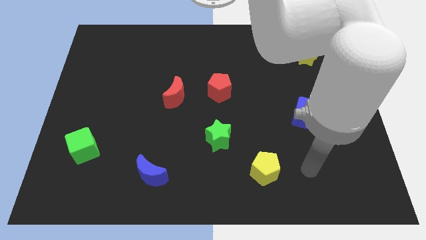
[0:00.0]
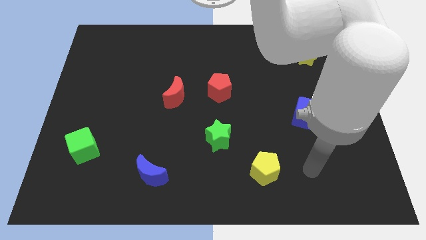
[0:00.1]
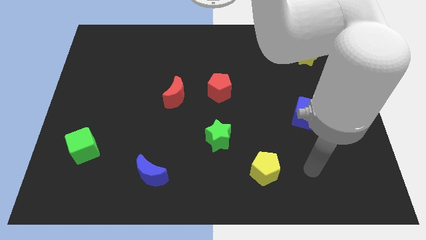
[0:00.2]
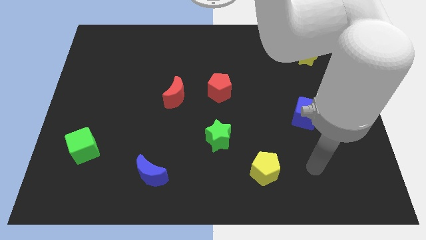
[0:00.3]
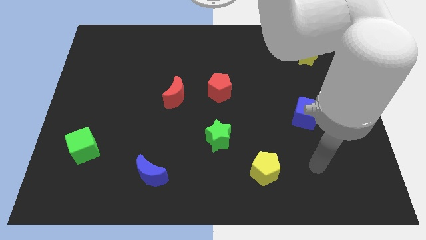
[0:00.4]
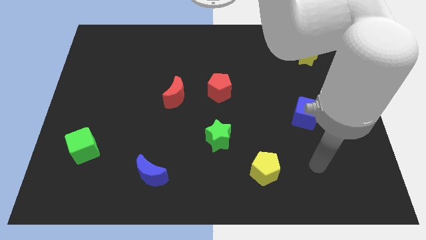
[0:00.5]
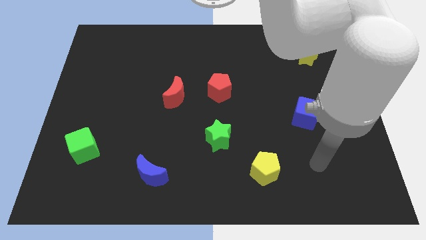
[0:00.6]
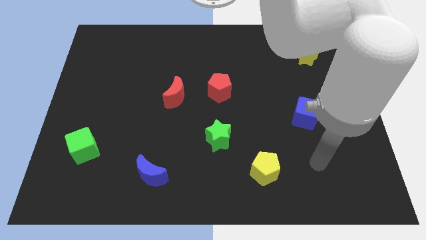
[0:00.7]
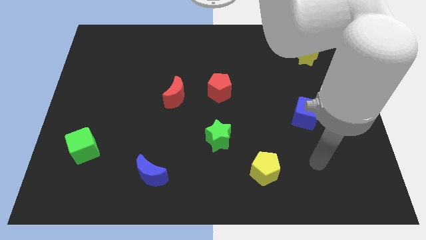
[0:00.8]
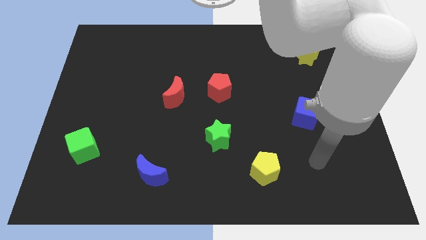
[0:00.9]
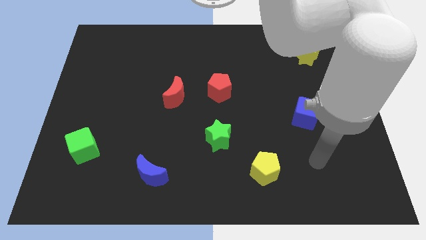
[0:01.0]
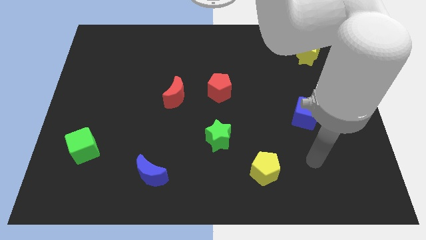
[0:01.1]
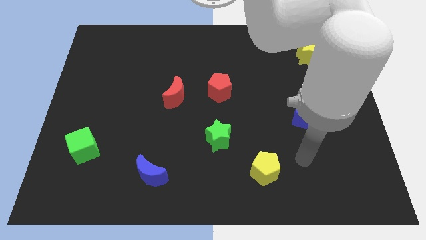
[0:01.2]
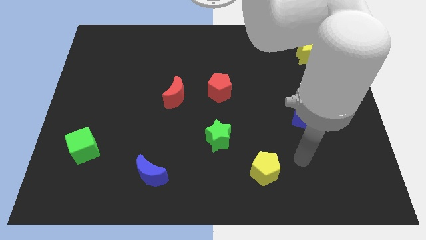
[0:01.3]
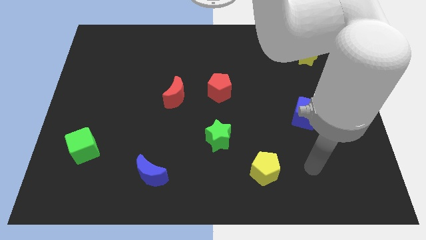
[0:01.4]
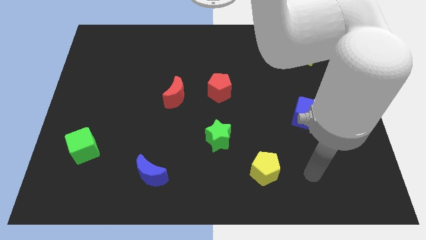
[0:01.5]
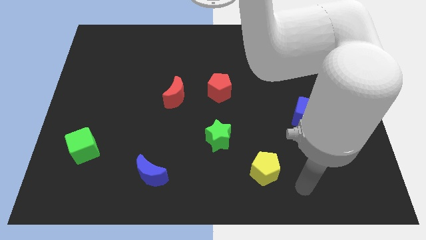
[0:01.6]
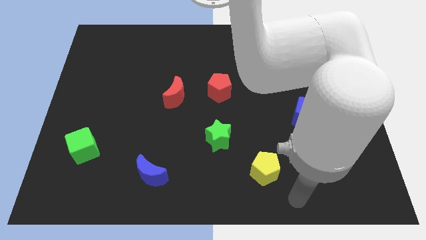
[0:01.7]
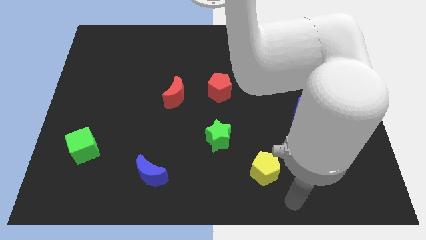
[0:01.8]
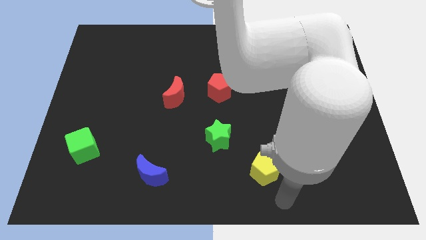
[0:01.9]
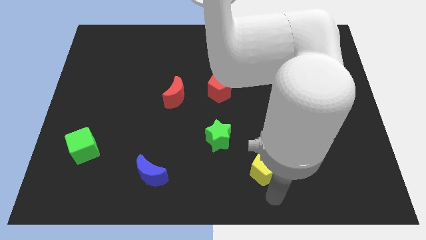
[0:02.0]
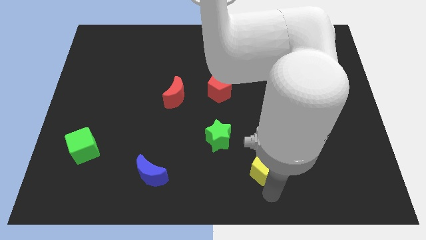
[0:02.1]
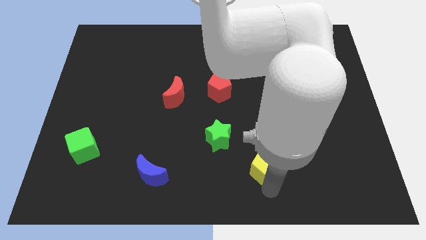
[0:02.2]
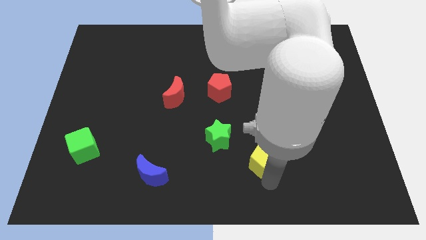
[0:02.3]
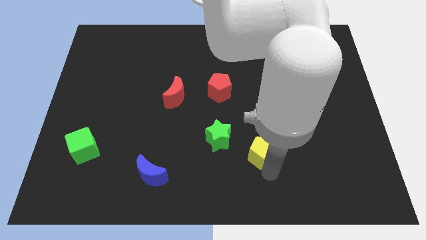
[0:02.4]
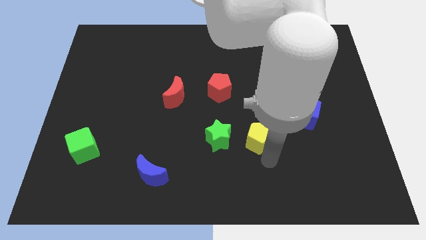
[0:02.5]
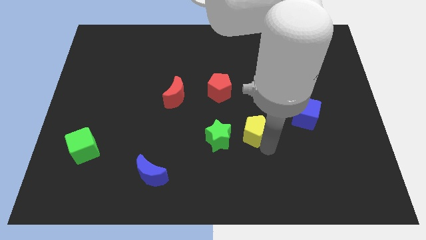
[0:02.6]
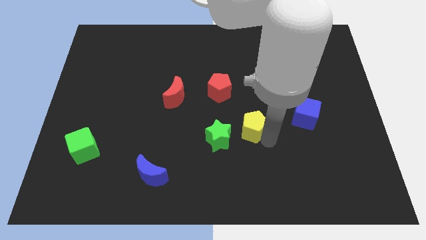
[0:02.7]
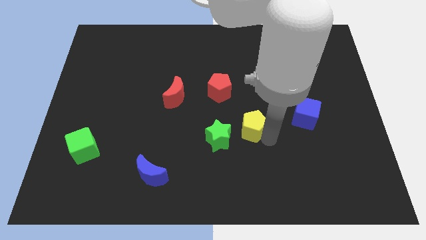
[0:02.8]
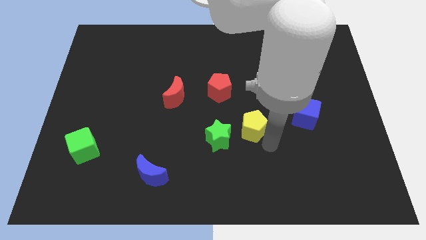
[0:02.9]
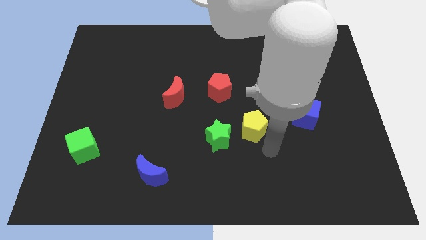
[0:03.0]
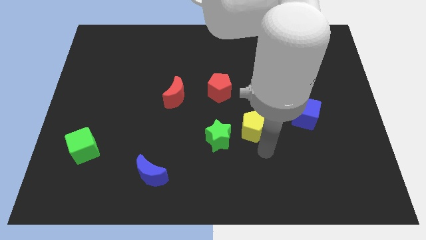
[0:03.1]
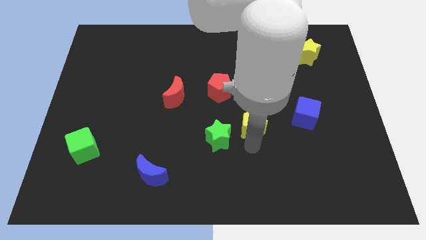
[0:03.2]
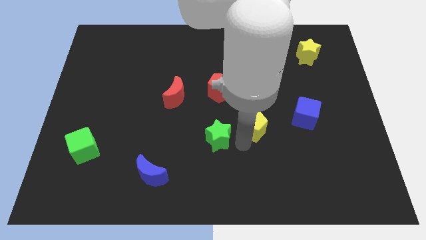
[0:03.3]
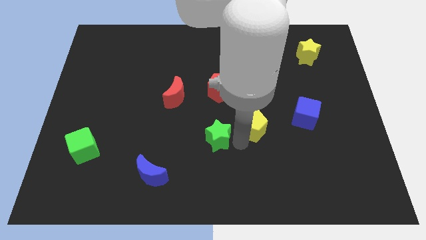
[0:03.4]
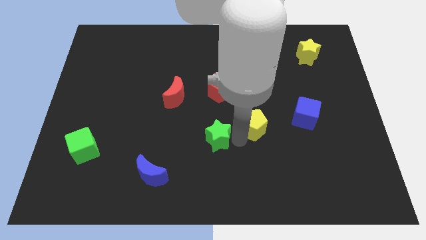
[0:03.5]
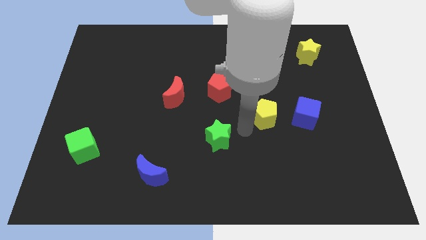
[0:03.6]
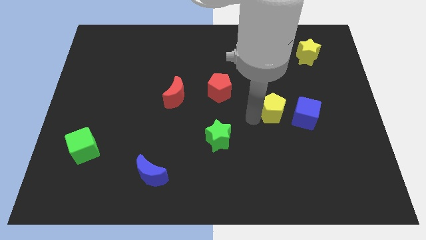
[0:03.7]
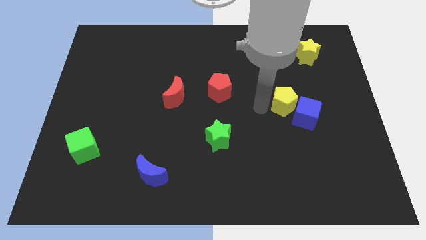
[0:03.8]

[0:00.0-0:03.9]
place the yellow pentagon to the left side of the blue cube

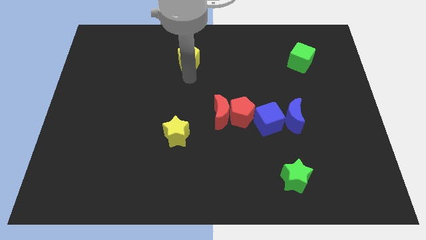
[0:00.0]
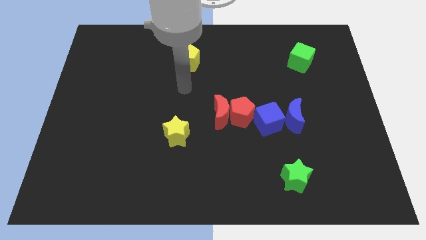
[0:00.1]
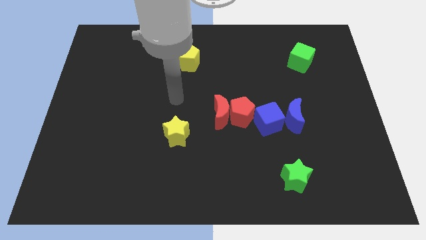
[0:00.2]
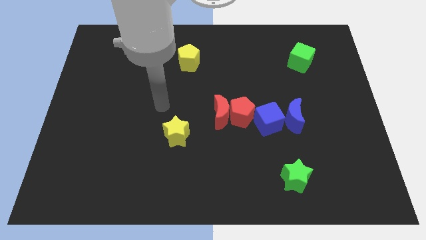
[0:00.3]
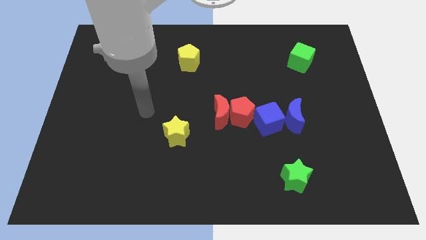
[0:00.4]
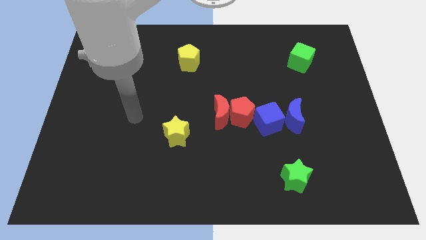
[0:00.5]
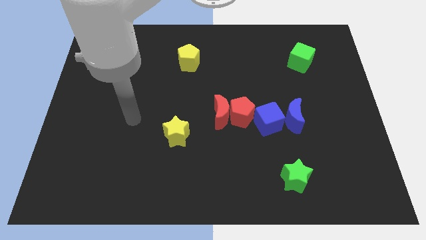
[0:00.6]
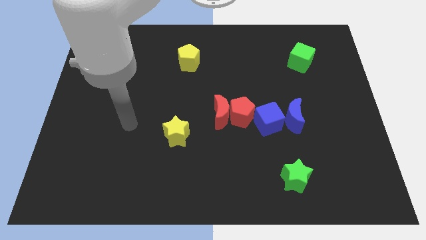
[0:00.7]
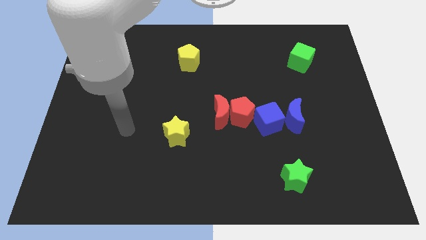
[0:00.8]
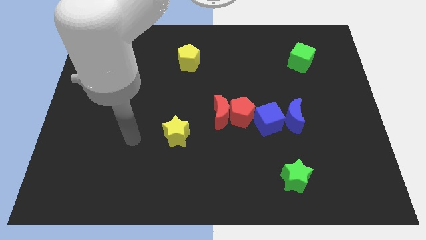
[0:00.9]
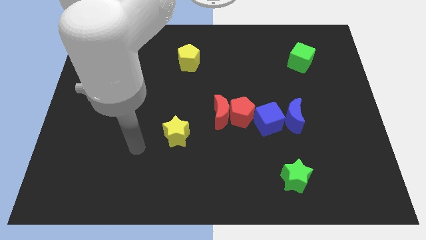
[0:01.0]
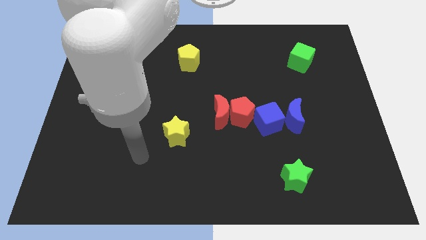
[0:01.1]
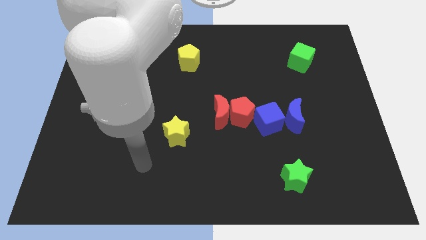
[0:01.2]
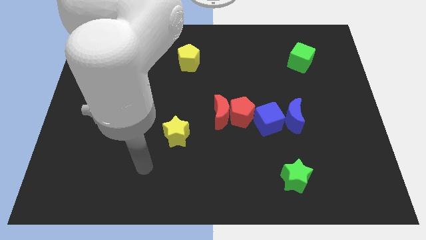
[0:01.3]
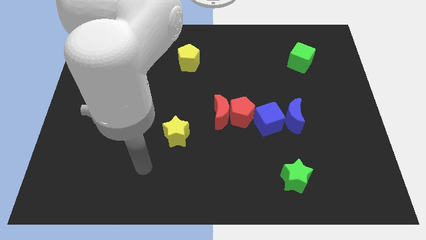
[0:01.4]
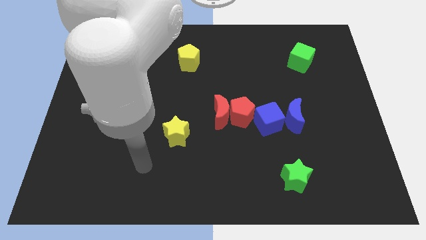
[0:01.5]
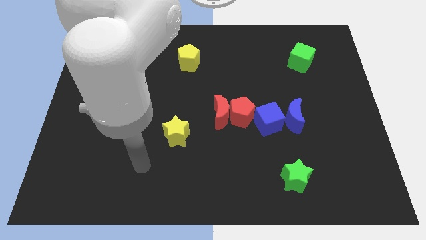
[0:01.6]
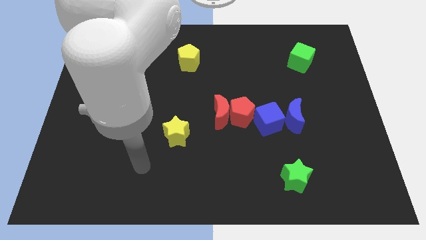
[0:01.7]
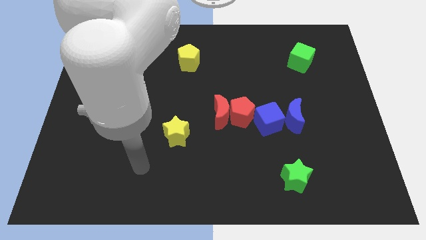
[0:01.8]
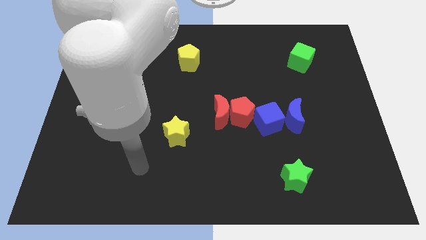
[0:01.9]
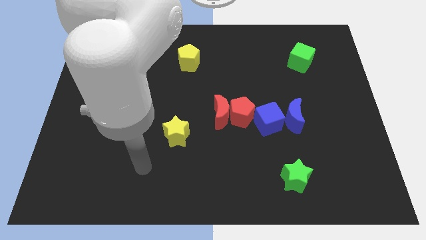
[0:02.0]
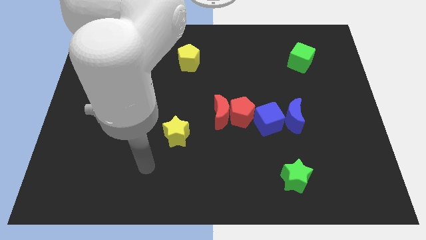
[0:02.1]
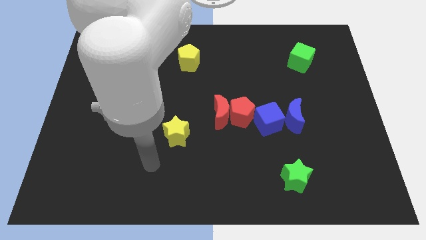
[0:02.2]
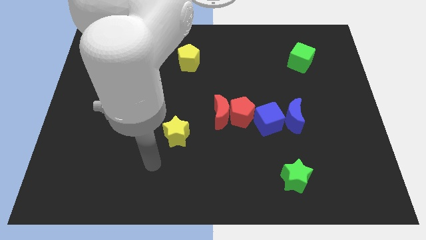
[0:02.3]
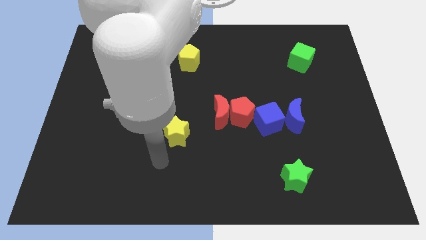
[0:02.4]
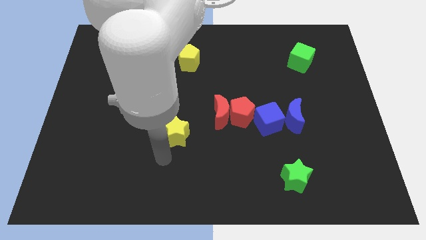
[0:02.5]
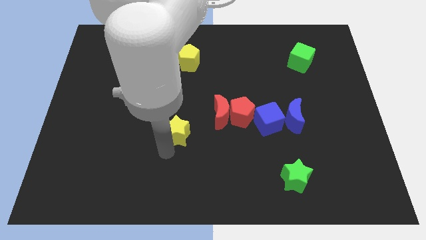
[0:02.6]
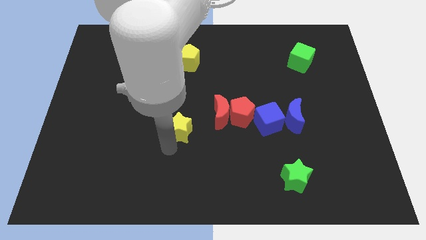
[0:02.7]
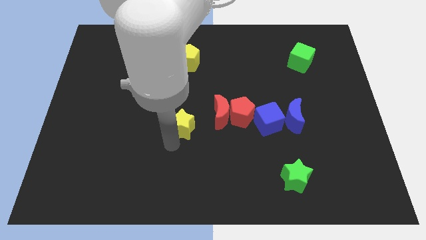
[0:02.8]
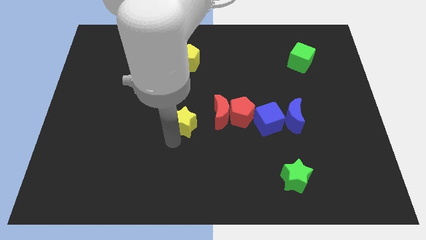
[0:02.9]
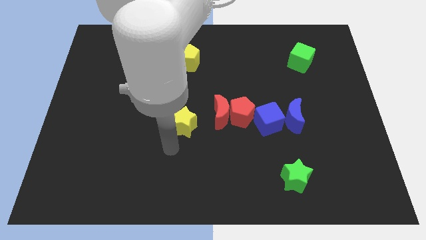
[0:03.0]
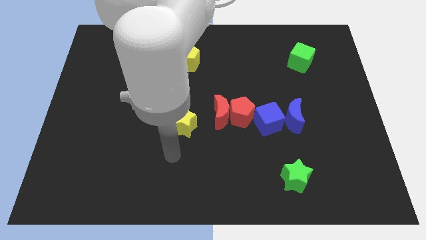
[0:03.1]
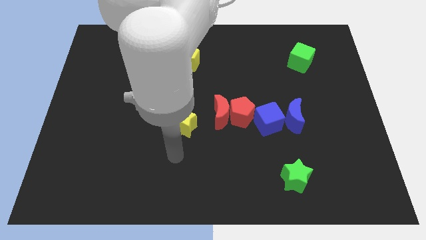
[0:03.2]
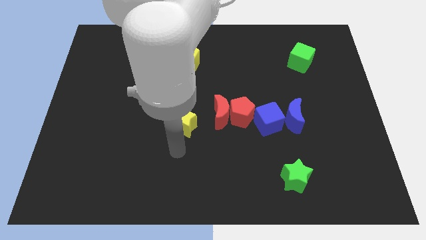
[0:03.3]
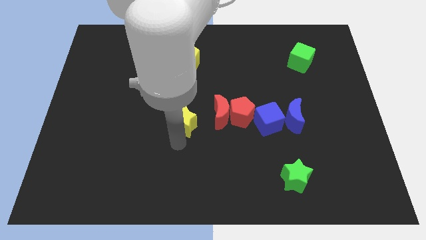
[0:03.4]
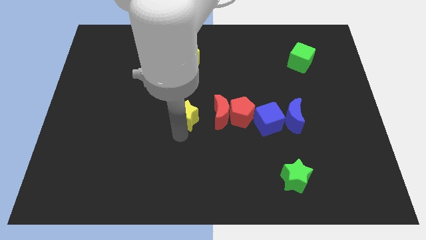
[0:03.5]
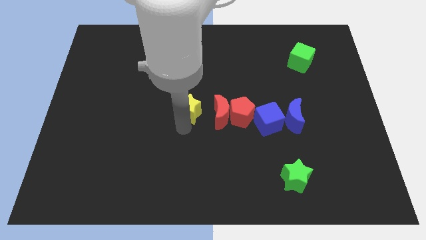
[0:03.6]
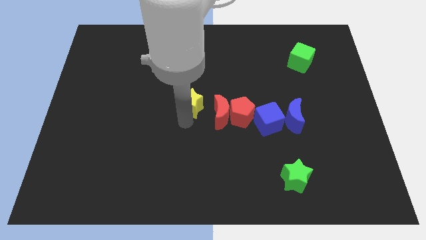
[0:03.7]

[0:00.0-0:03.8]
move the yellow star top left to the red crescent

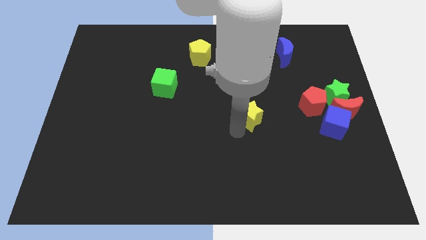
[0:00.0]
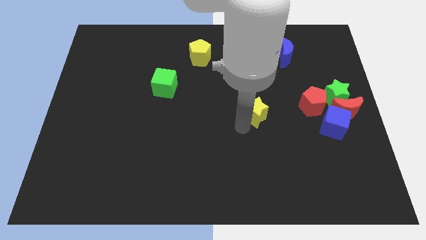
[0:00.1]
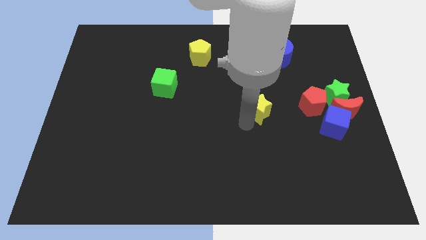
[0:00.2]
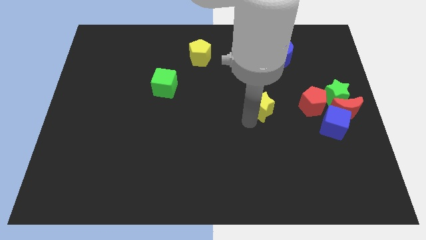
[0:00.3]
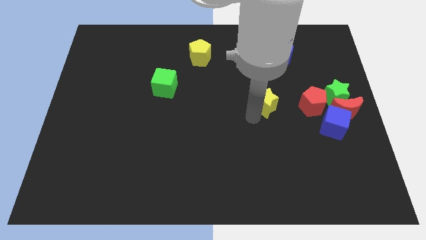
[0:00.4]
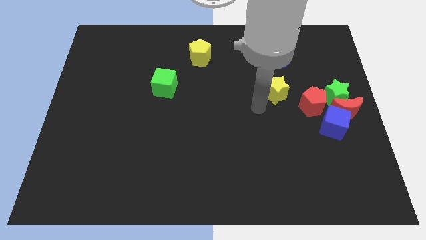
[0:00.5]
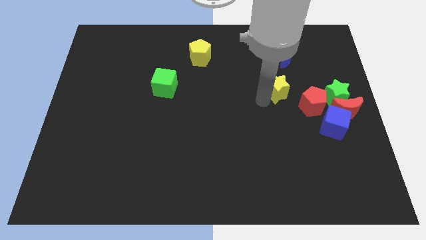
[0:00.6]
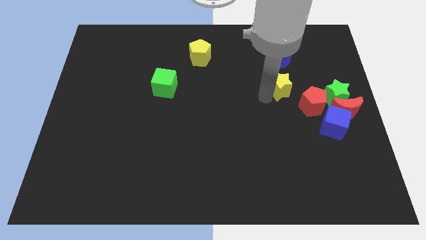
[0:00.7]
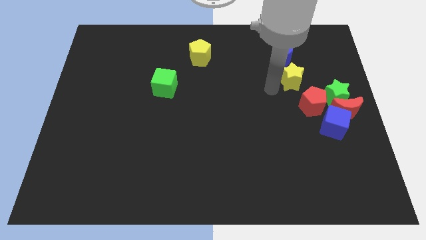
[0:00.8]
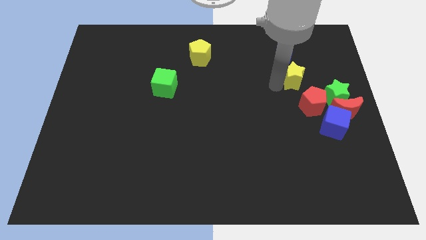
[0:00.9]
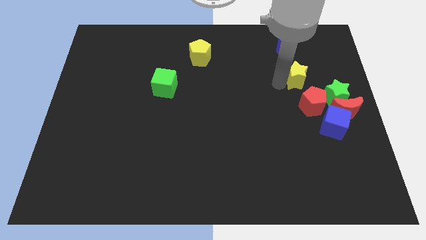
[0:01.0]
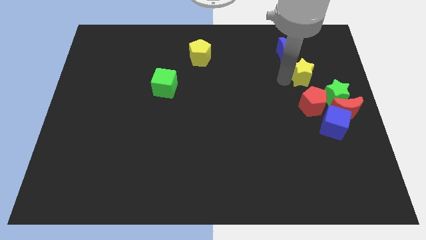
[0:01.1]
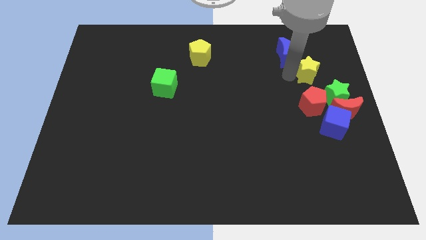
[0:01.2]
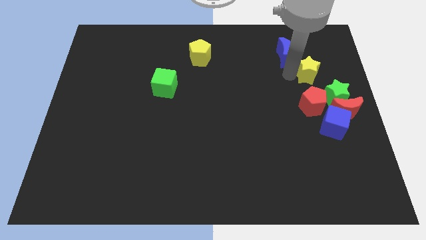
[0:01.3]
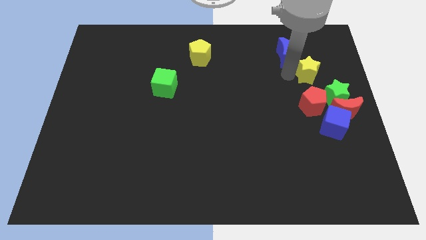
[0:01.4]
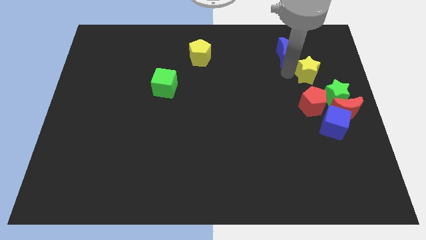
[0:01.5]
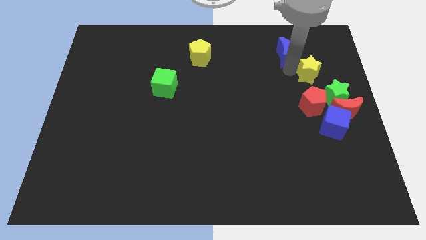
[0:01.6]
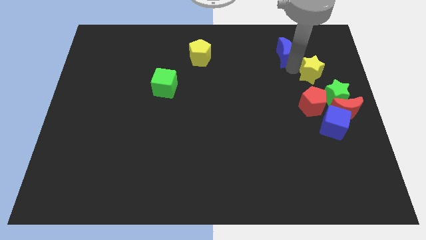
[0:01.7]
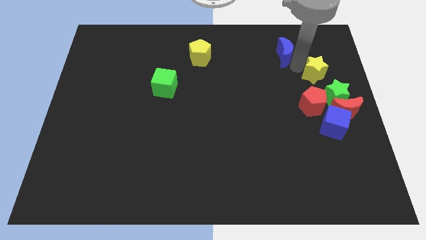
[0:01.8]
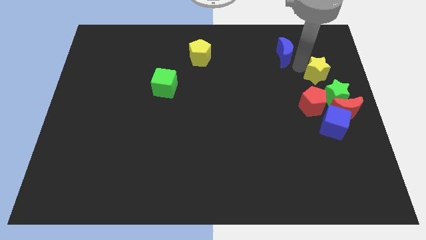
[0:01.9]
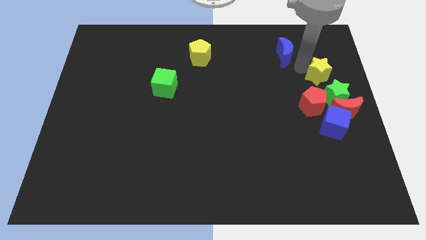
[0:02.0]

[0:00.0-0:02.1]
move the yellow star towards the top side of the group of blocks
